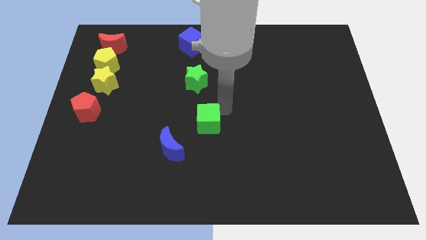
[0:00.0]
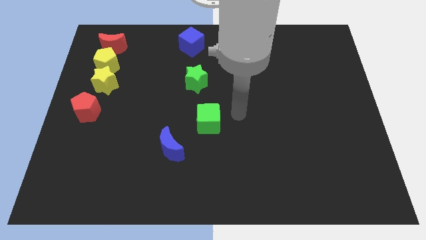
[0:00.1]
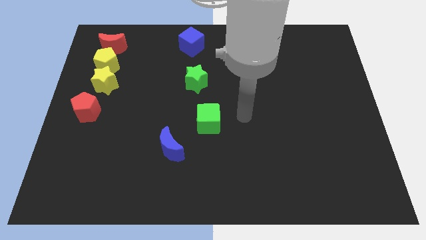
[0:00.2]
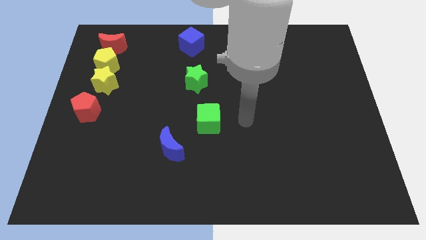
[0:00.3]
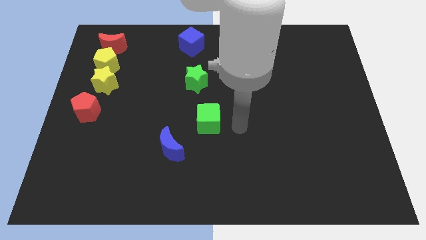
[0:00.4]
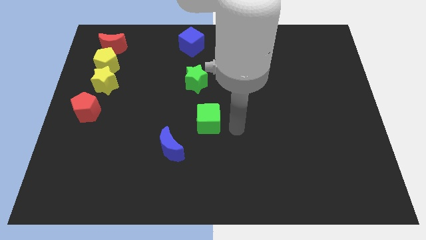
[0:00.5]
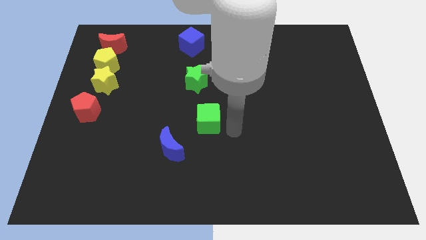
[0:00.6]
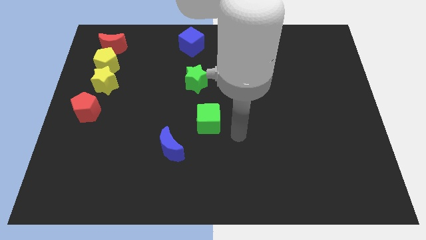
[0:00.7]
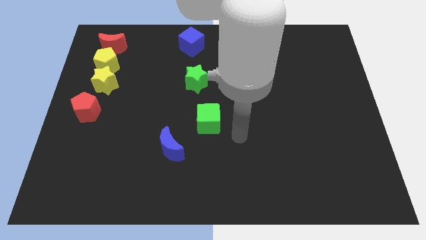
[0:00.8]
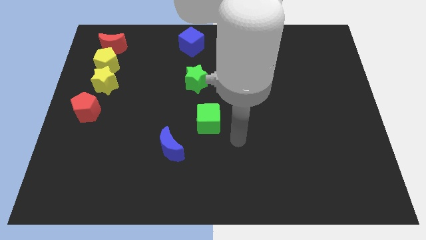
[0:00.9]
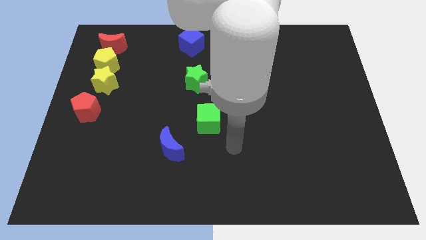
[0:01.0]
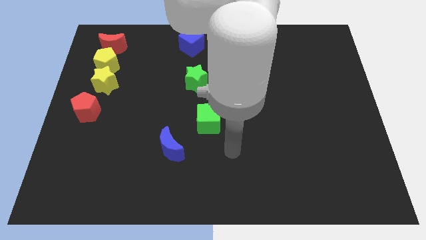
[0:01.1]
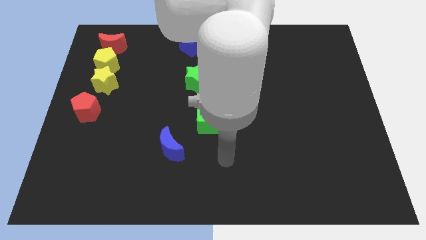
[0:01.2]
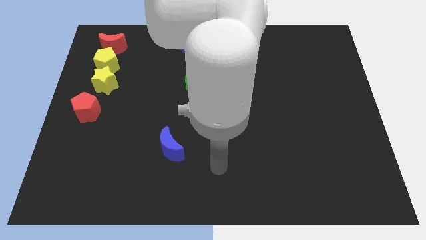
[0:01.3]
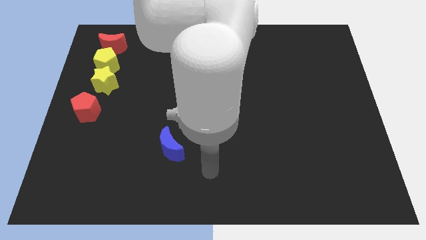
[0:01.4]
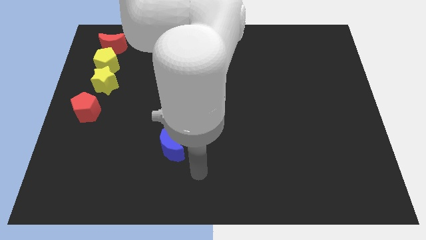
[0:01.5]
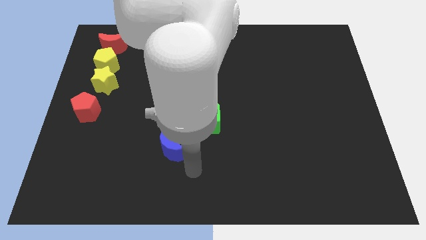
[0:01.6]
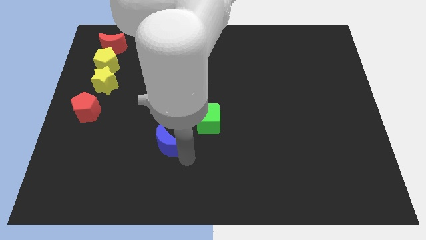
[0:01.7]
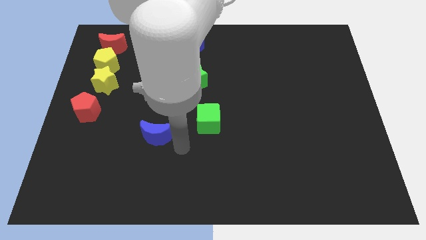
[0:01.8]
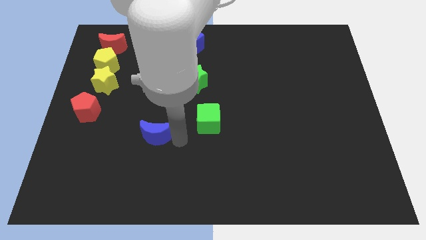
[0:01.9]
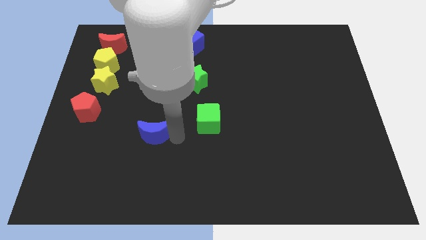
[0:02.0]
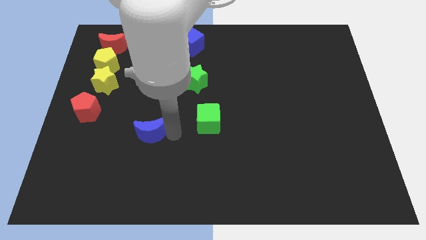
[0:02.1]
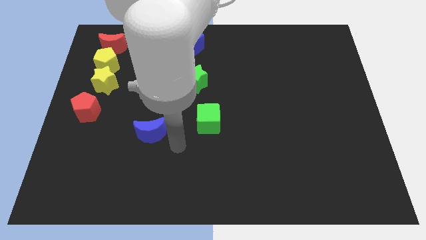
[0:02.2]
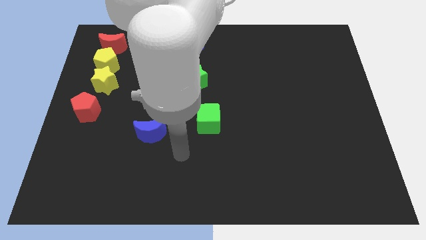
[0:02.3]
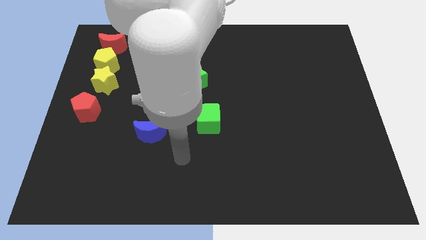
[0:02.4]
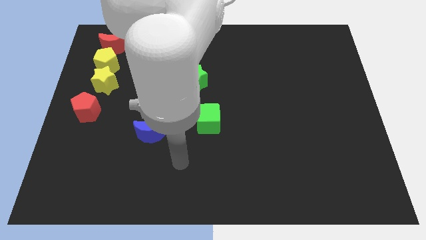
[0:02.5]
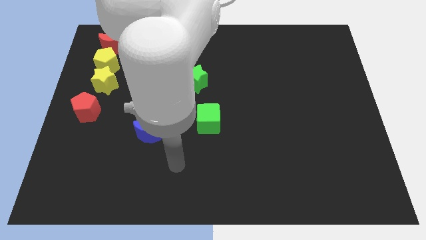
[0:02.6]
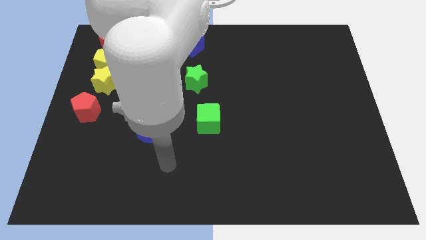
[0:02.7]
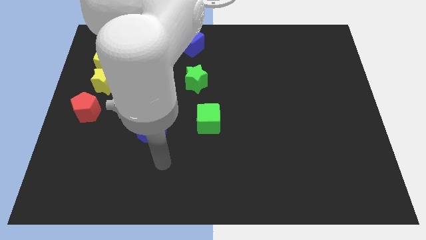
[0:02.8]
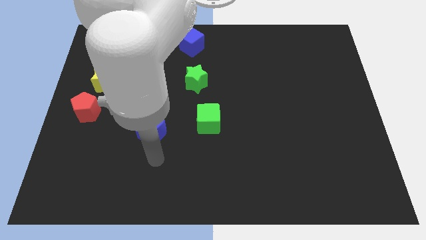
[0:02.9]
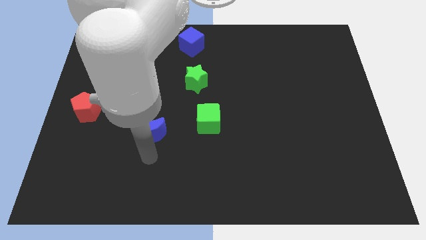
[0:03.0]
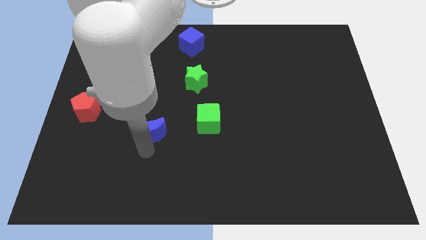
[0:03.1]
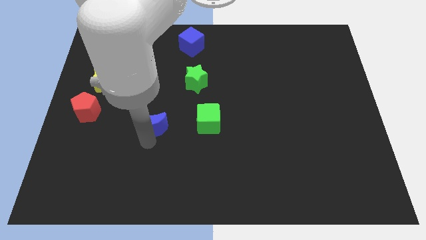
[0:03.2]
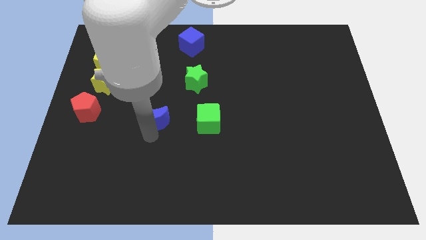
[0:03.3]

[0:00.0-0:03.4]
move the blue moon to the left of green cube

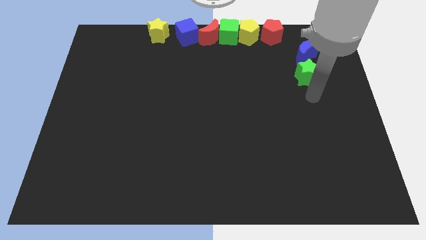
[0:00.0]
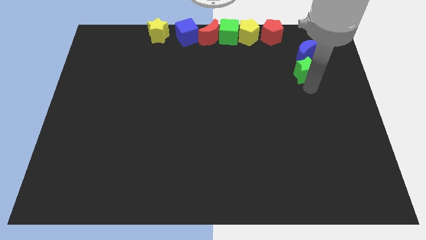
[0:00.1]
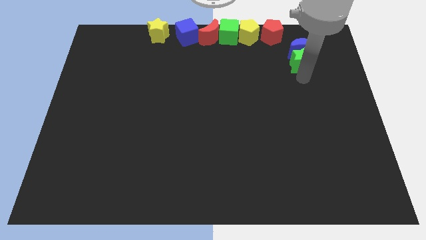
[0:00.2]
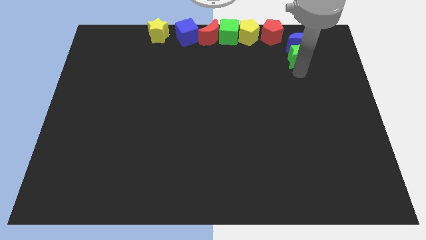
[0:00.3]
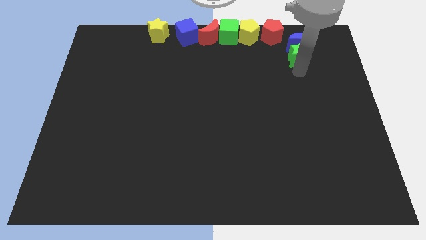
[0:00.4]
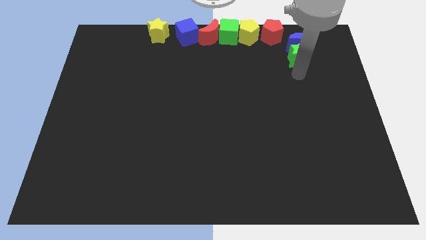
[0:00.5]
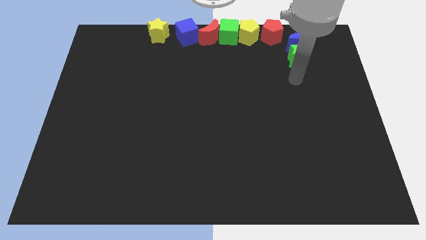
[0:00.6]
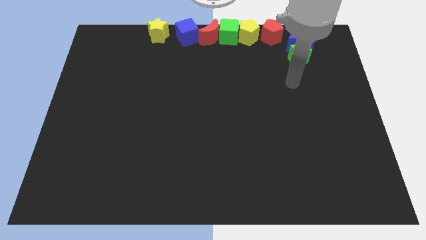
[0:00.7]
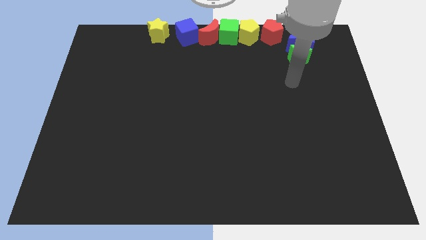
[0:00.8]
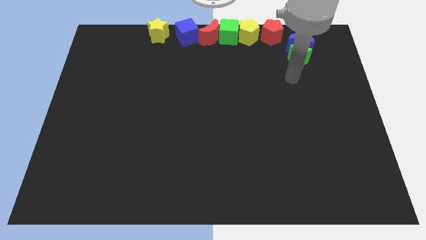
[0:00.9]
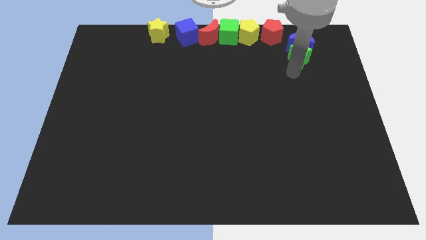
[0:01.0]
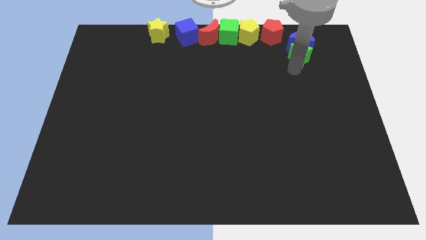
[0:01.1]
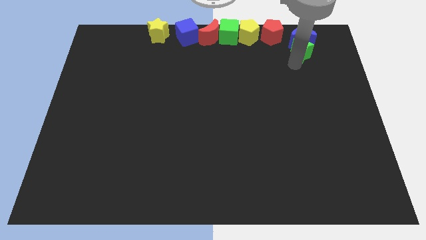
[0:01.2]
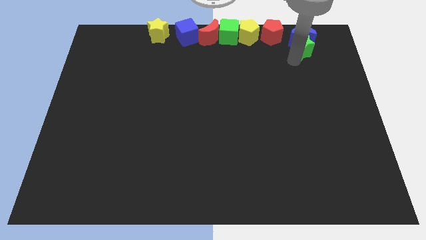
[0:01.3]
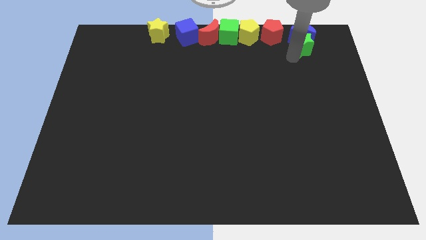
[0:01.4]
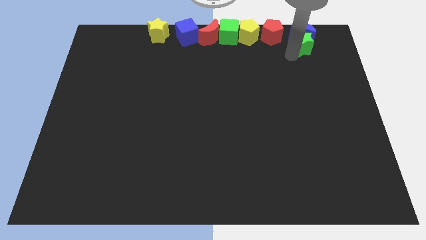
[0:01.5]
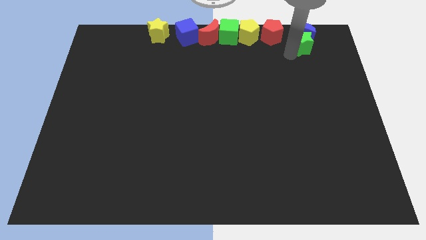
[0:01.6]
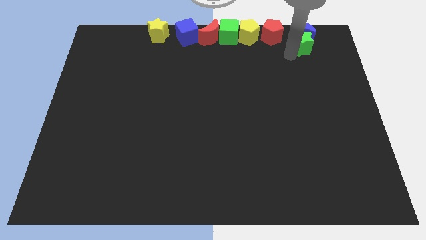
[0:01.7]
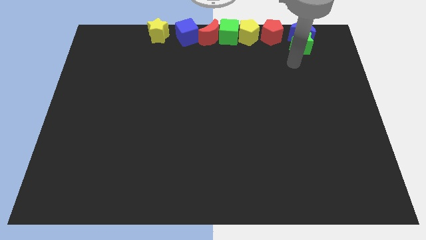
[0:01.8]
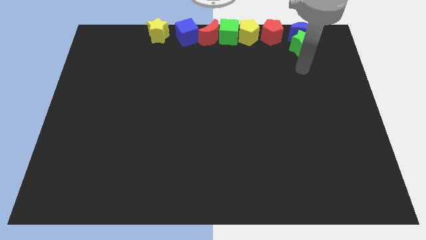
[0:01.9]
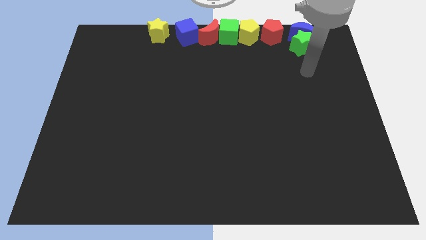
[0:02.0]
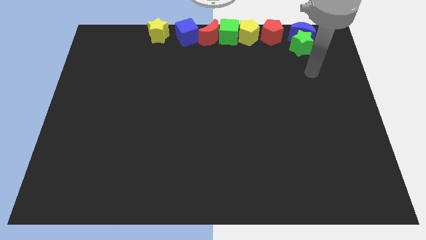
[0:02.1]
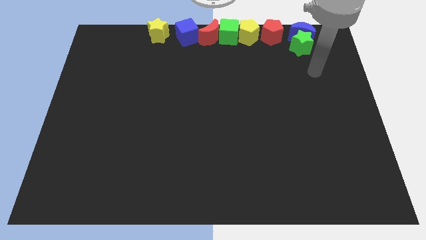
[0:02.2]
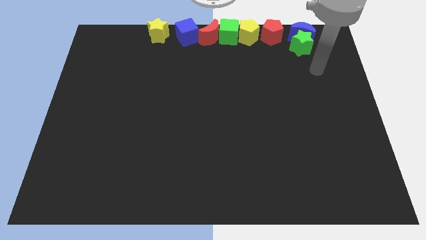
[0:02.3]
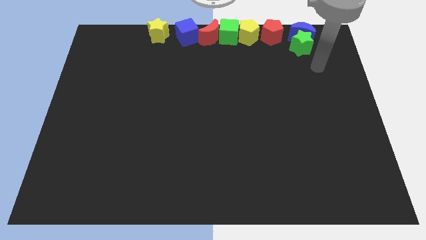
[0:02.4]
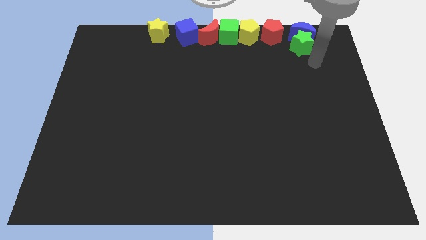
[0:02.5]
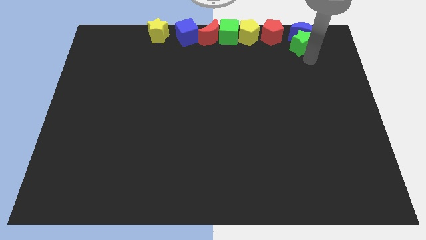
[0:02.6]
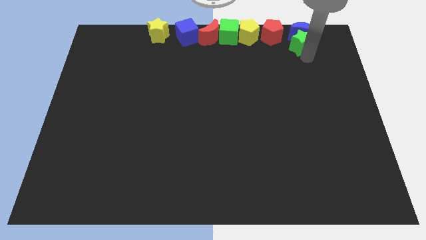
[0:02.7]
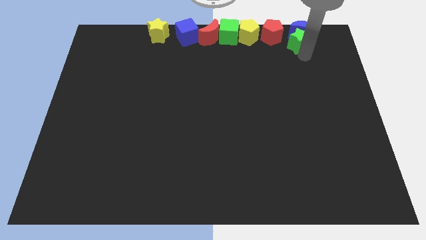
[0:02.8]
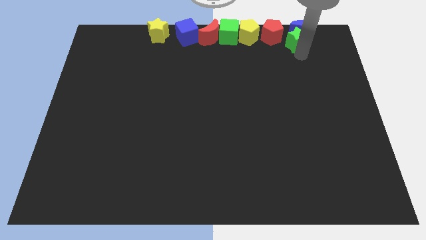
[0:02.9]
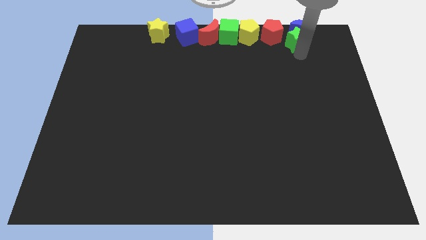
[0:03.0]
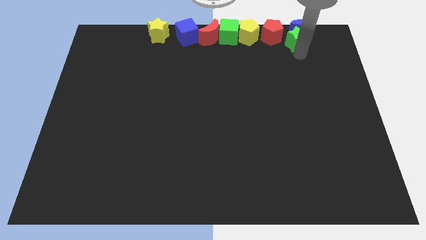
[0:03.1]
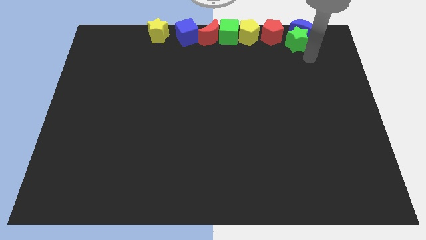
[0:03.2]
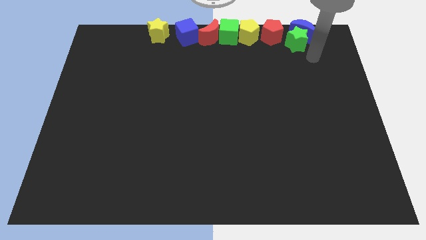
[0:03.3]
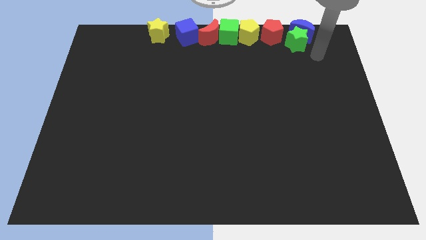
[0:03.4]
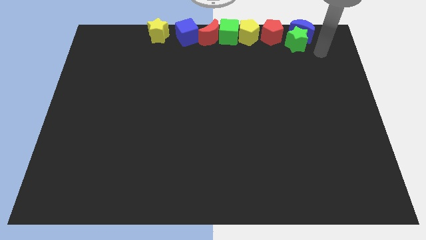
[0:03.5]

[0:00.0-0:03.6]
push the blue moon to the right side of the red pentagon with the green star

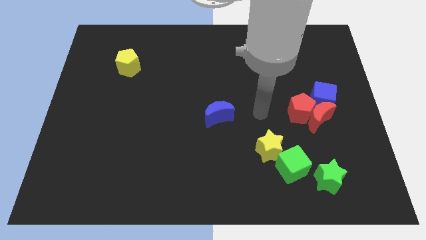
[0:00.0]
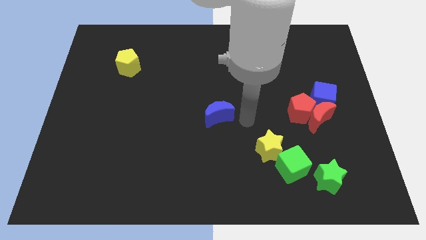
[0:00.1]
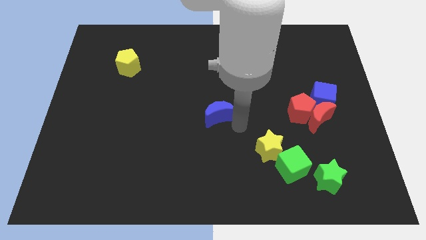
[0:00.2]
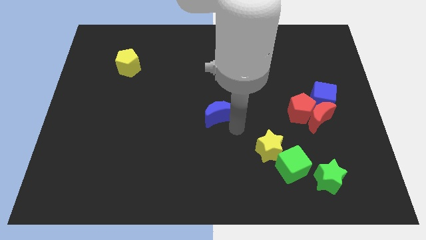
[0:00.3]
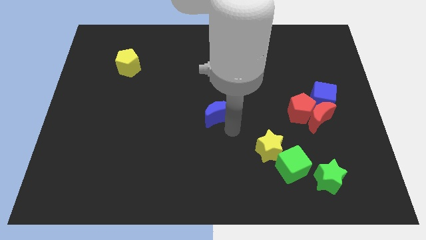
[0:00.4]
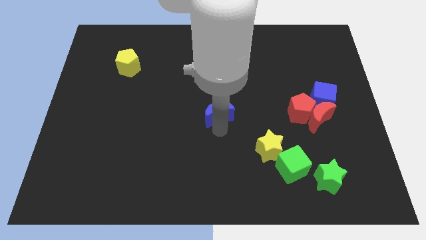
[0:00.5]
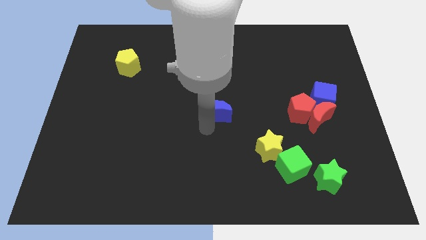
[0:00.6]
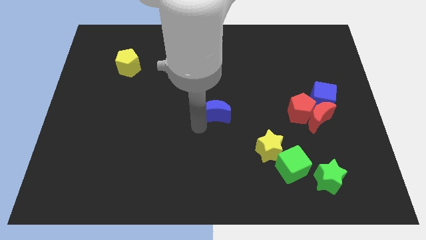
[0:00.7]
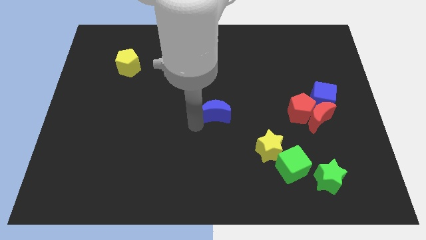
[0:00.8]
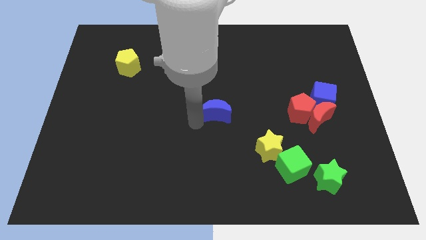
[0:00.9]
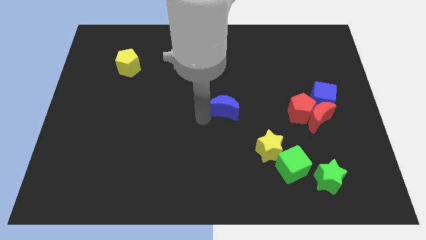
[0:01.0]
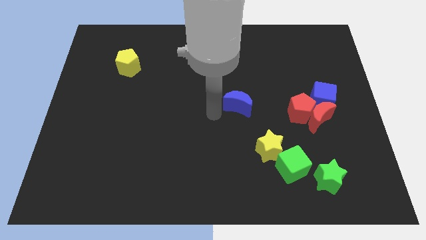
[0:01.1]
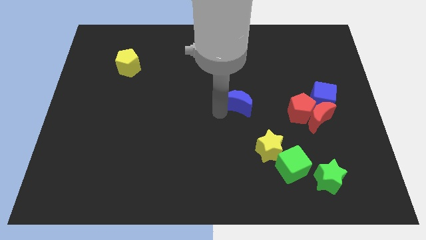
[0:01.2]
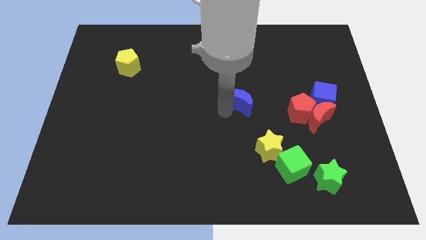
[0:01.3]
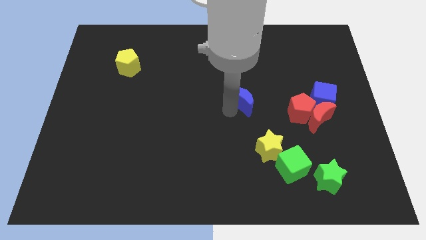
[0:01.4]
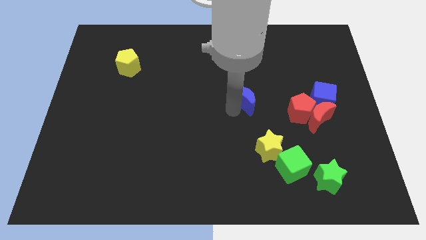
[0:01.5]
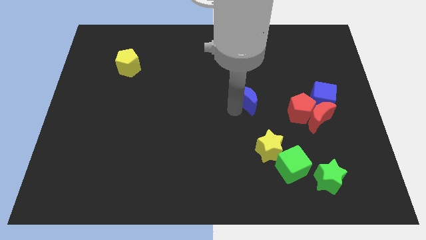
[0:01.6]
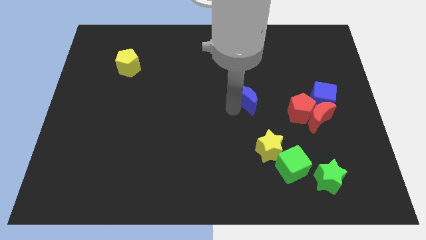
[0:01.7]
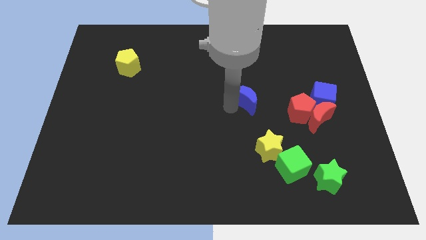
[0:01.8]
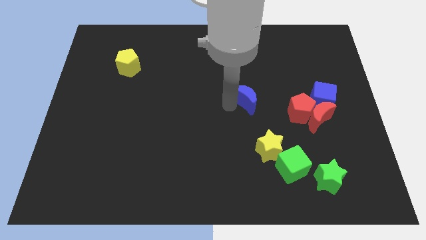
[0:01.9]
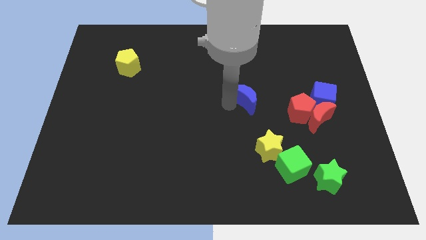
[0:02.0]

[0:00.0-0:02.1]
slide blue crescent to the left of red pentagon
